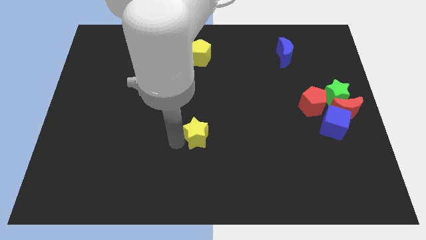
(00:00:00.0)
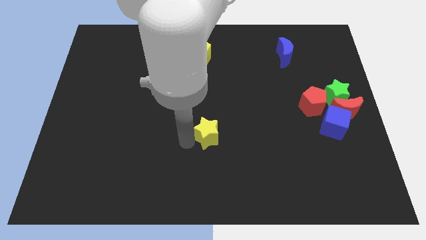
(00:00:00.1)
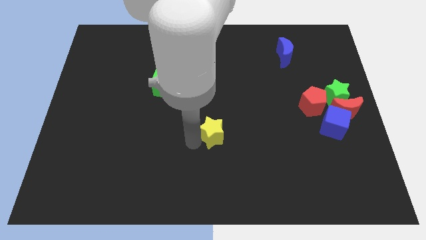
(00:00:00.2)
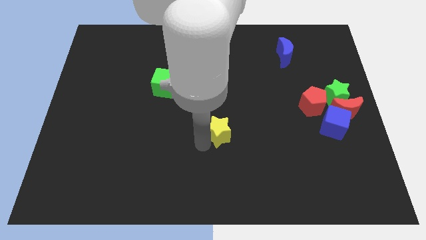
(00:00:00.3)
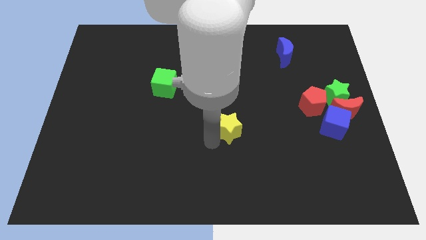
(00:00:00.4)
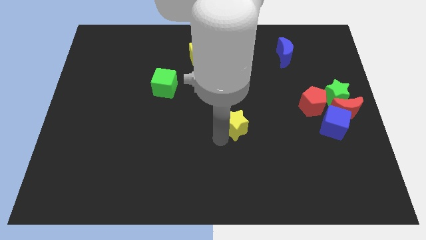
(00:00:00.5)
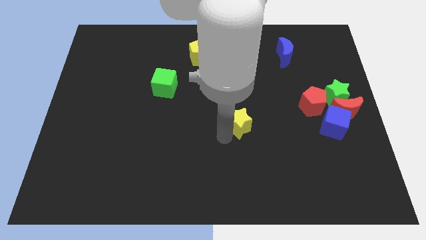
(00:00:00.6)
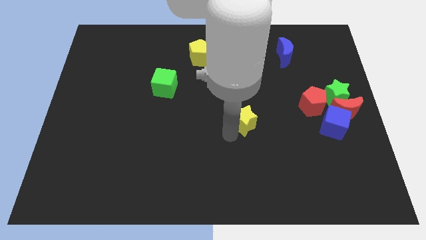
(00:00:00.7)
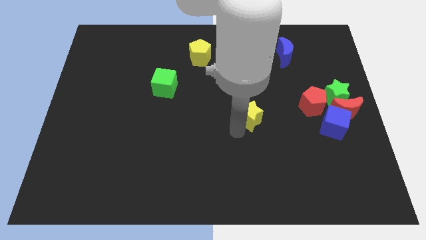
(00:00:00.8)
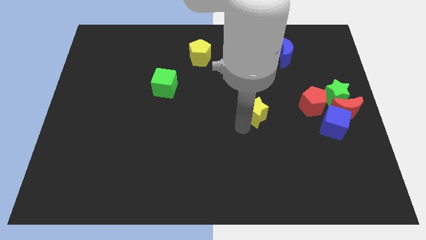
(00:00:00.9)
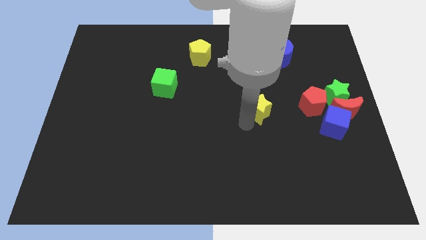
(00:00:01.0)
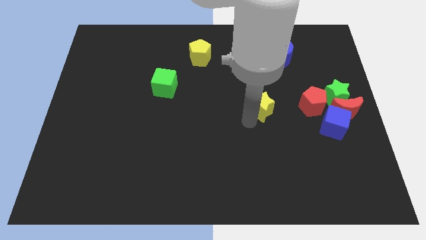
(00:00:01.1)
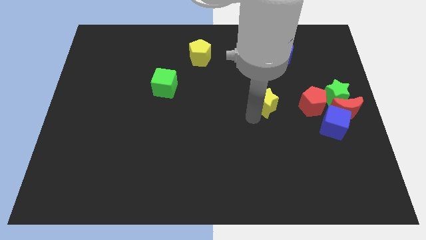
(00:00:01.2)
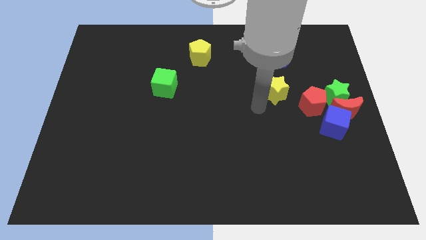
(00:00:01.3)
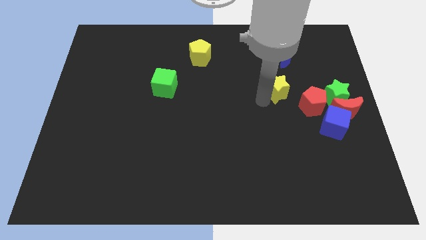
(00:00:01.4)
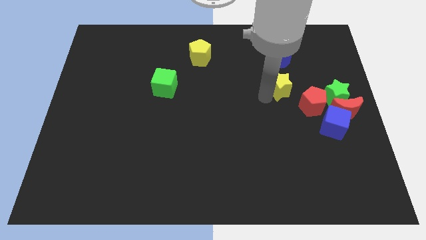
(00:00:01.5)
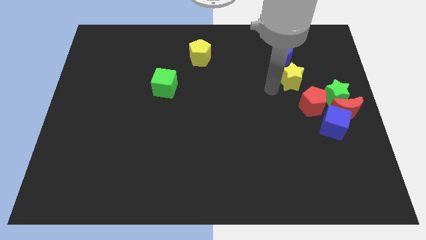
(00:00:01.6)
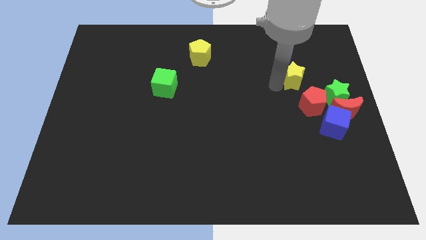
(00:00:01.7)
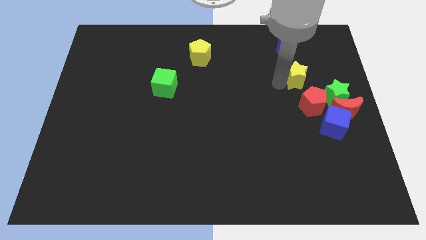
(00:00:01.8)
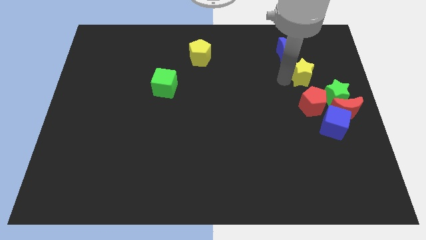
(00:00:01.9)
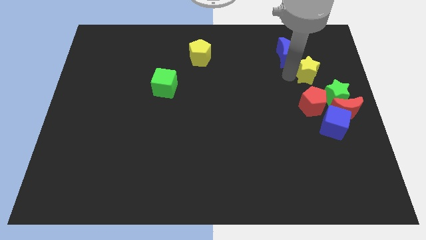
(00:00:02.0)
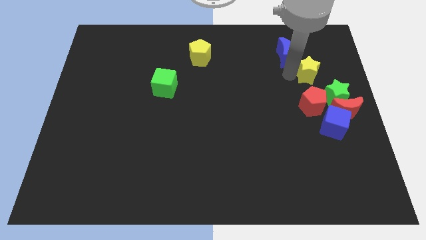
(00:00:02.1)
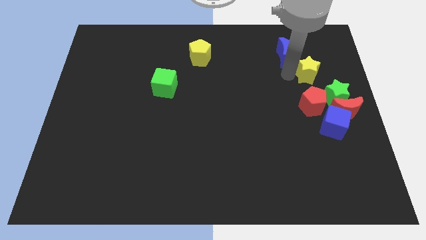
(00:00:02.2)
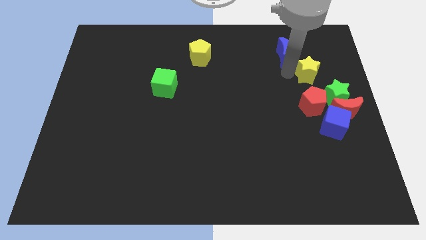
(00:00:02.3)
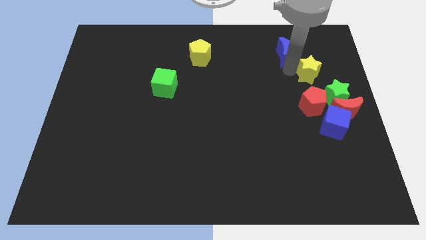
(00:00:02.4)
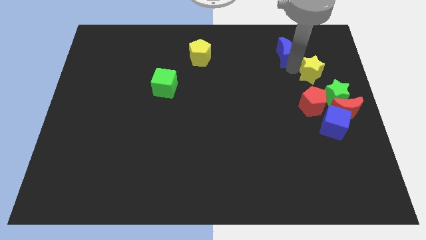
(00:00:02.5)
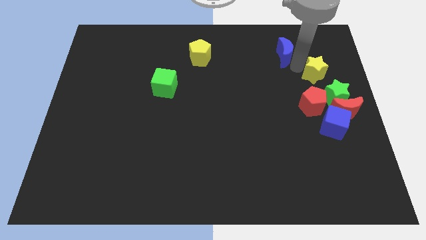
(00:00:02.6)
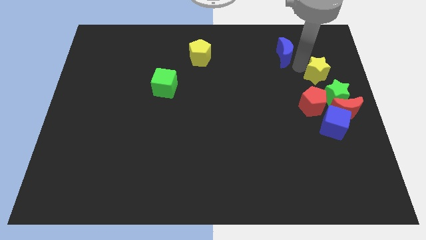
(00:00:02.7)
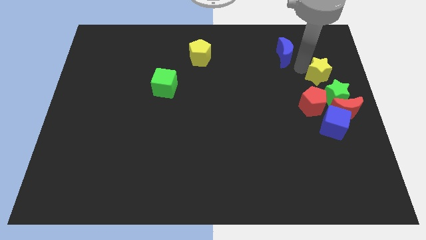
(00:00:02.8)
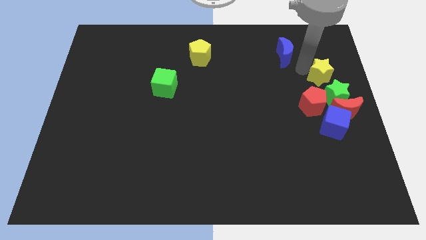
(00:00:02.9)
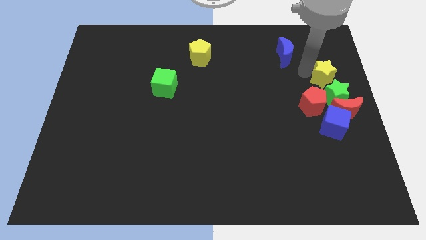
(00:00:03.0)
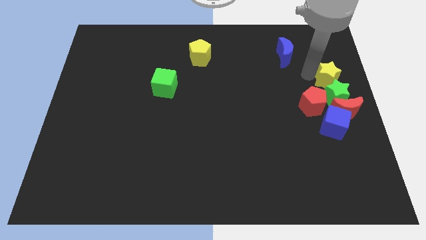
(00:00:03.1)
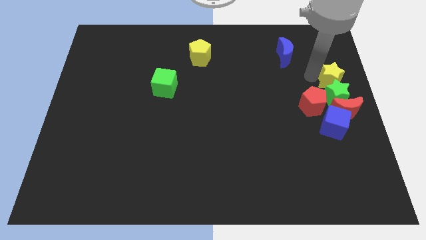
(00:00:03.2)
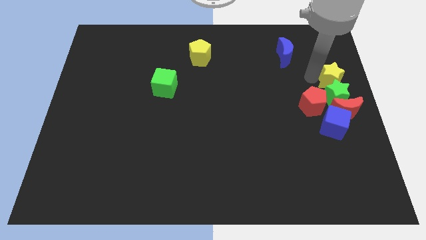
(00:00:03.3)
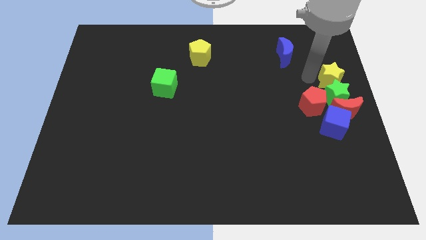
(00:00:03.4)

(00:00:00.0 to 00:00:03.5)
push the yellow star to the top of the green star

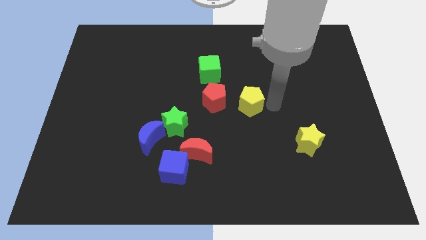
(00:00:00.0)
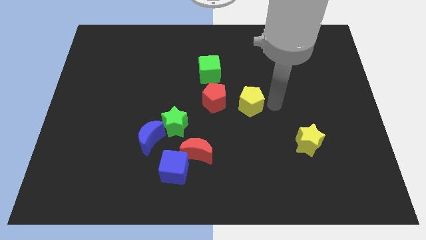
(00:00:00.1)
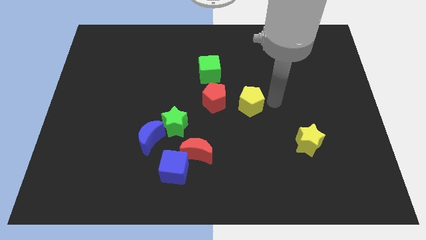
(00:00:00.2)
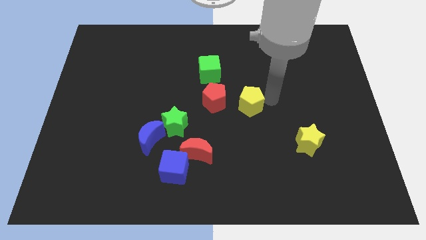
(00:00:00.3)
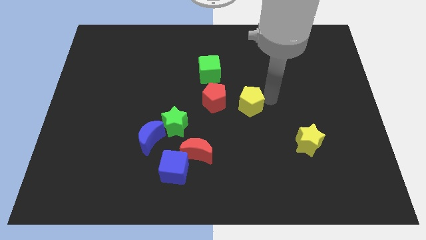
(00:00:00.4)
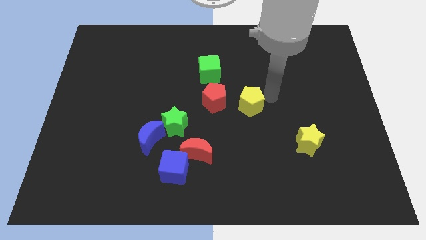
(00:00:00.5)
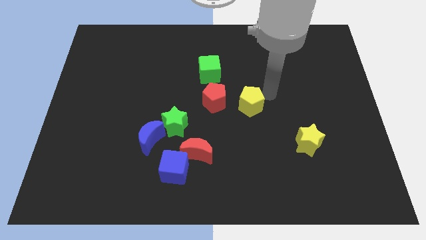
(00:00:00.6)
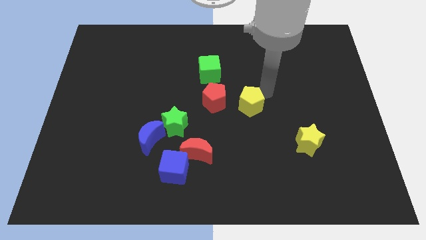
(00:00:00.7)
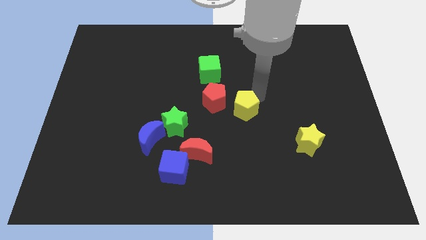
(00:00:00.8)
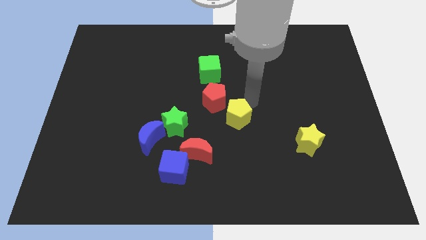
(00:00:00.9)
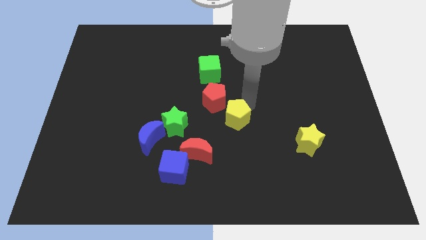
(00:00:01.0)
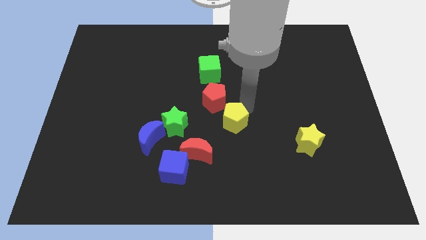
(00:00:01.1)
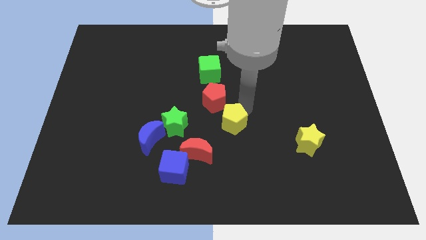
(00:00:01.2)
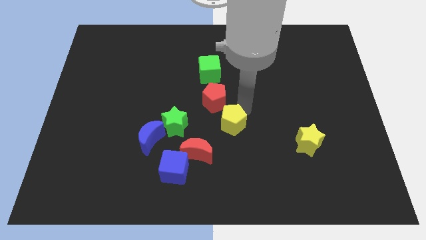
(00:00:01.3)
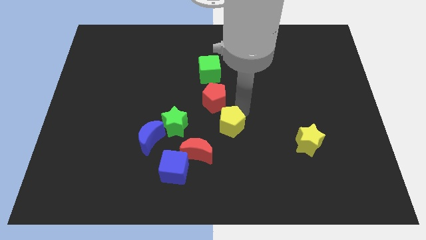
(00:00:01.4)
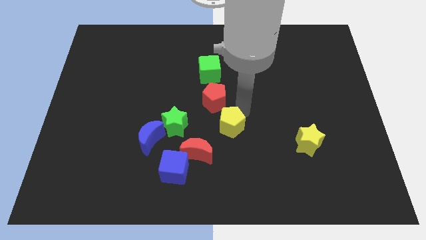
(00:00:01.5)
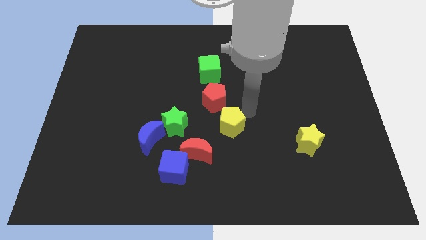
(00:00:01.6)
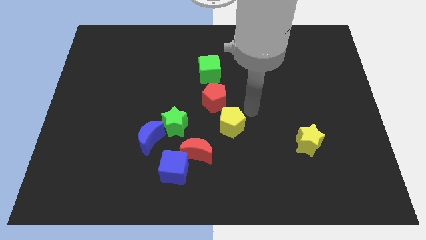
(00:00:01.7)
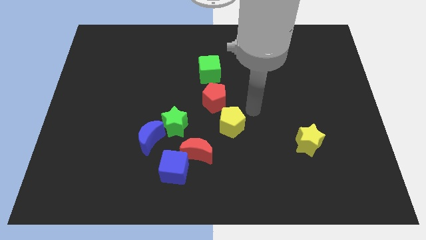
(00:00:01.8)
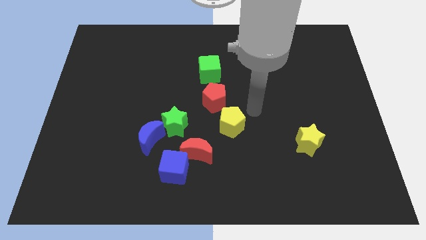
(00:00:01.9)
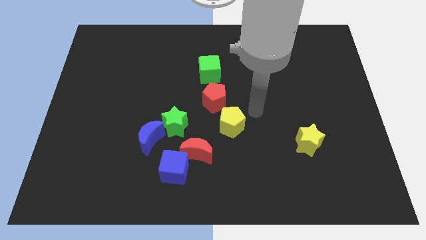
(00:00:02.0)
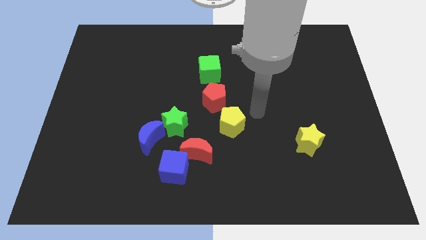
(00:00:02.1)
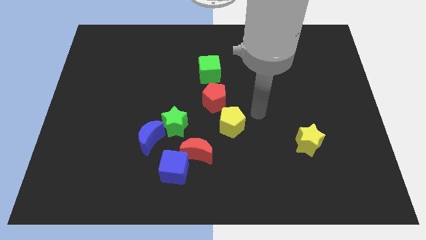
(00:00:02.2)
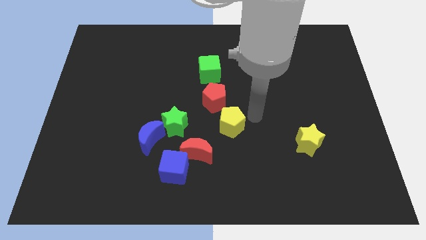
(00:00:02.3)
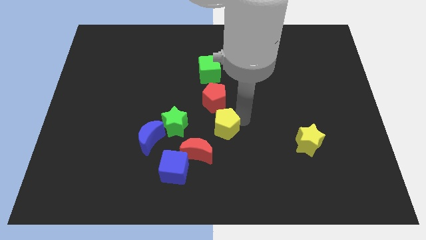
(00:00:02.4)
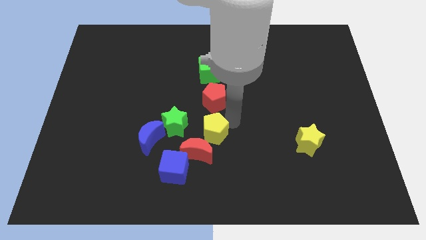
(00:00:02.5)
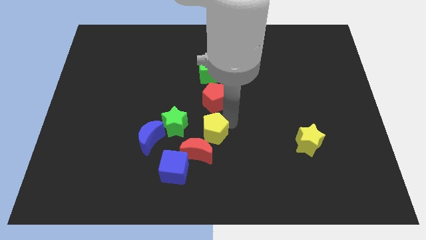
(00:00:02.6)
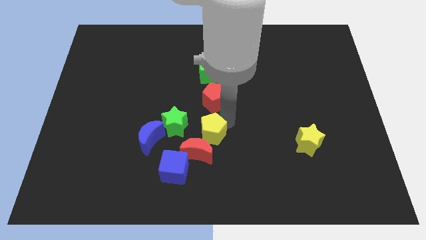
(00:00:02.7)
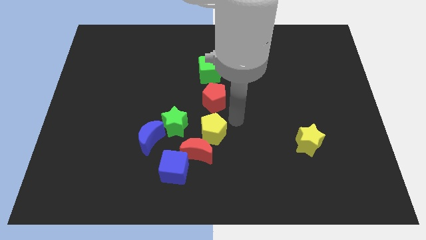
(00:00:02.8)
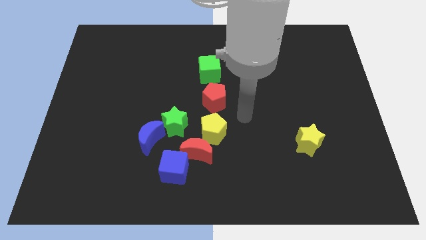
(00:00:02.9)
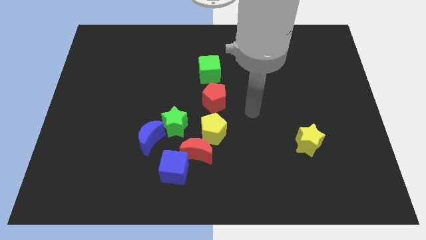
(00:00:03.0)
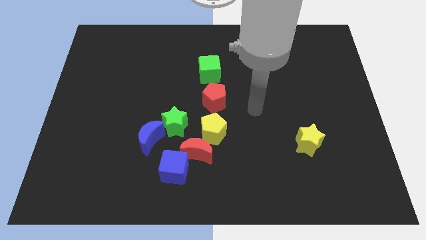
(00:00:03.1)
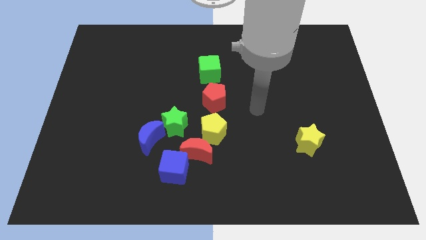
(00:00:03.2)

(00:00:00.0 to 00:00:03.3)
move yellow pentagon above red moon

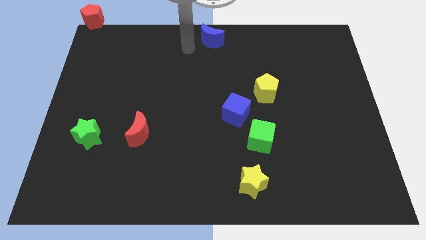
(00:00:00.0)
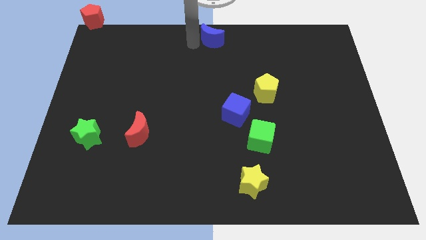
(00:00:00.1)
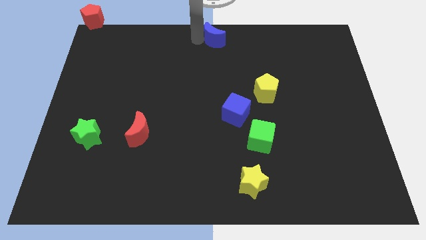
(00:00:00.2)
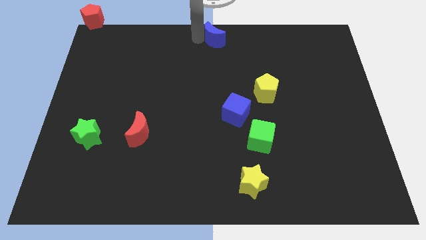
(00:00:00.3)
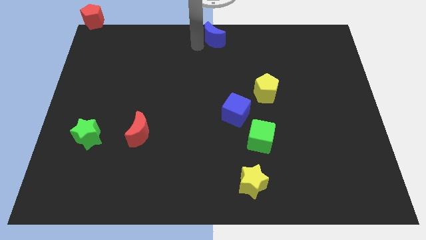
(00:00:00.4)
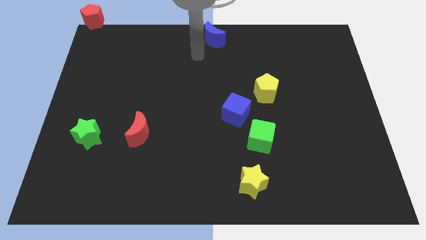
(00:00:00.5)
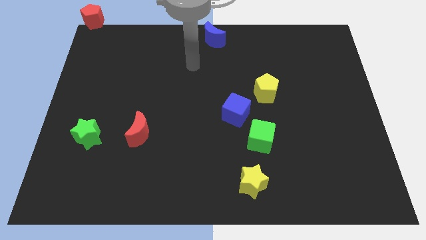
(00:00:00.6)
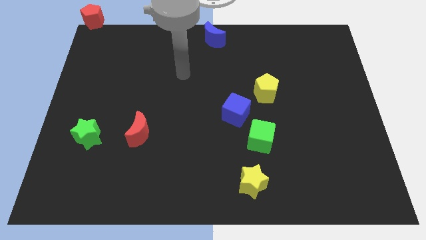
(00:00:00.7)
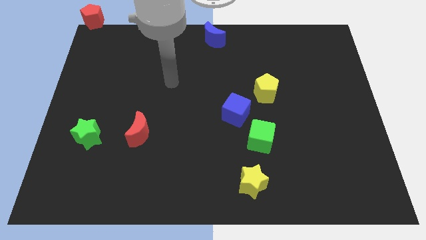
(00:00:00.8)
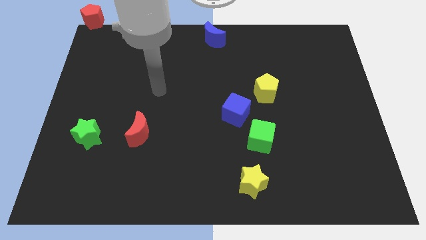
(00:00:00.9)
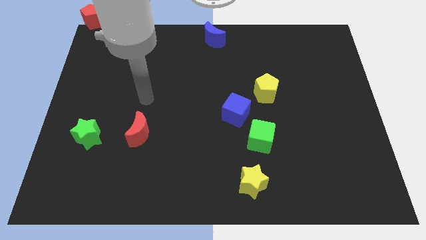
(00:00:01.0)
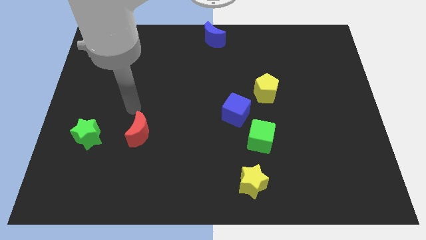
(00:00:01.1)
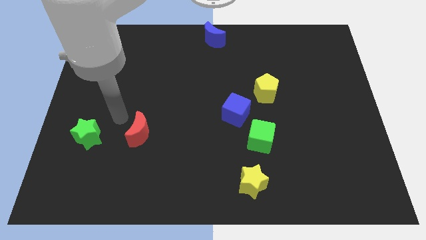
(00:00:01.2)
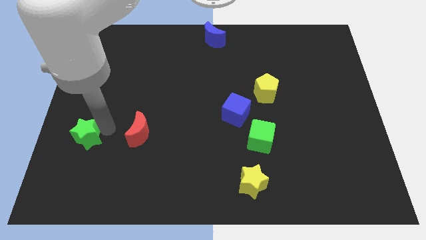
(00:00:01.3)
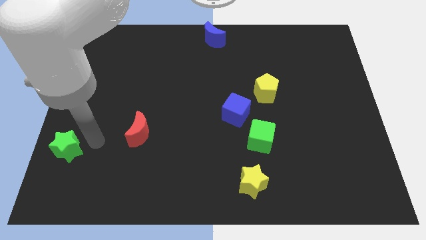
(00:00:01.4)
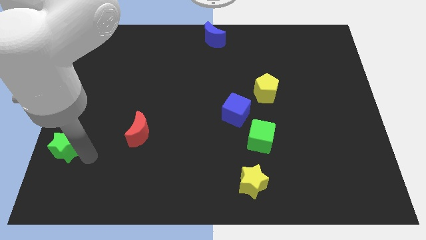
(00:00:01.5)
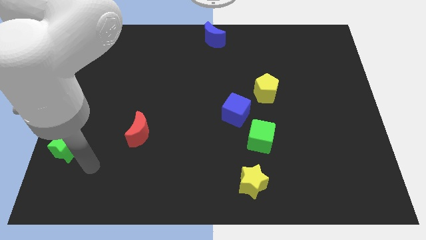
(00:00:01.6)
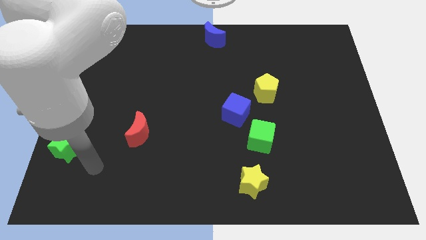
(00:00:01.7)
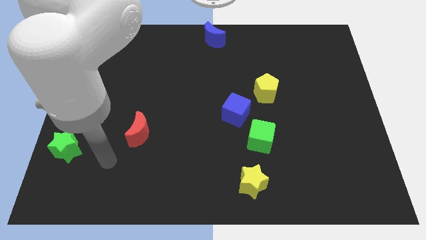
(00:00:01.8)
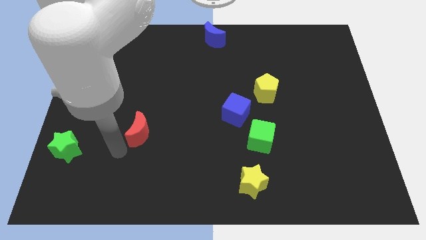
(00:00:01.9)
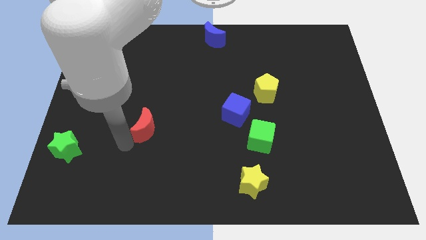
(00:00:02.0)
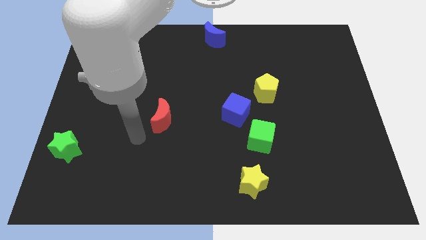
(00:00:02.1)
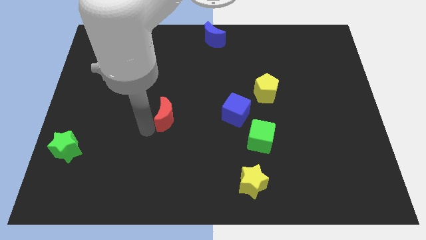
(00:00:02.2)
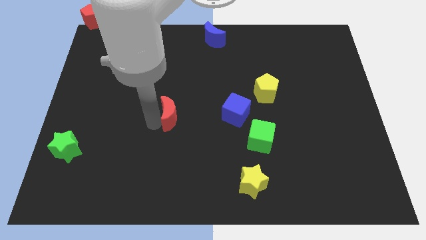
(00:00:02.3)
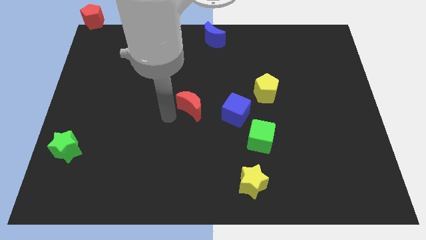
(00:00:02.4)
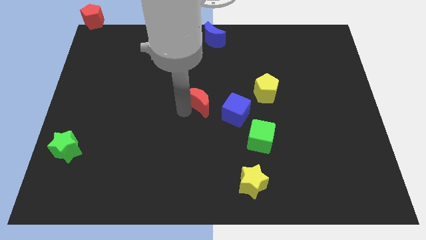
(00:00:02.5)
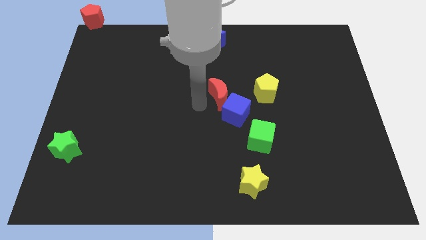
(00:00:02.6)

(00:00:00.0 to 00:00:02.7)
push red crescent below blue crescent
